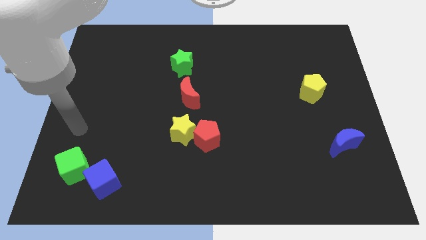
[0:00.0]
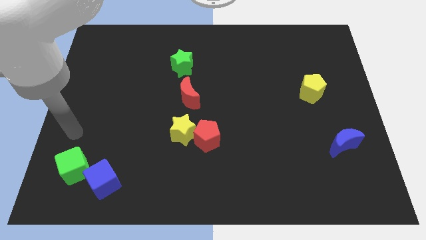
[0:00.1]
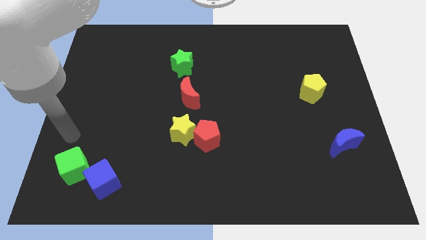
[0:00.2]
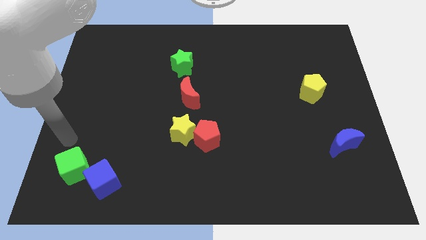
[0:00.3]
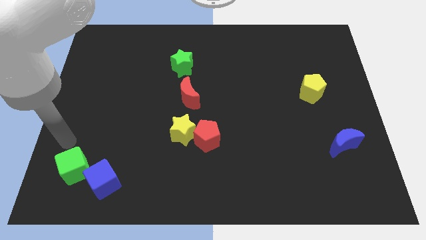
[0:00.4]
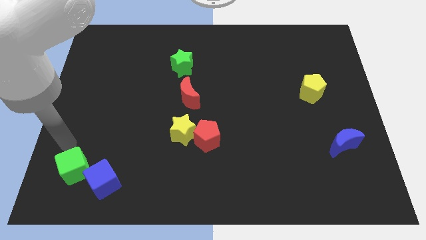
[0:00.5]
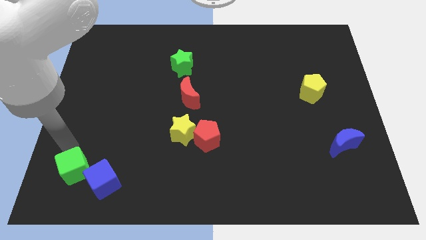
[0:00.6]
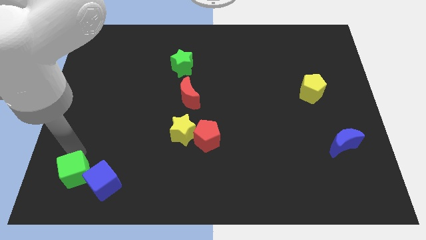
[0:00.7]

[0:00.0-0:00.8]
touch the top of green cube

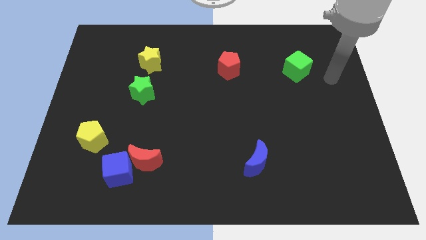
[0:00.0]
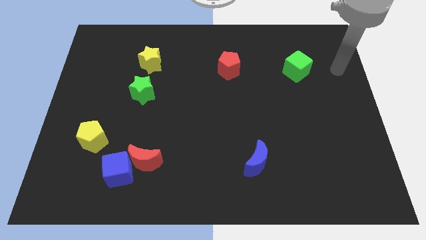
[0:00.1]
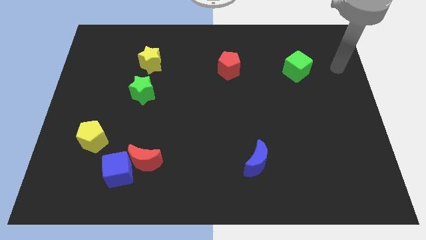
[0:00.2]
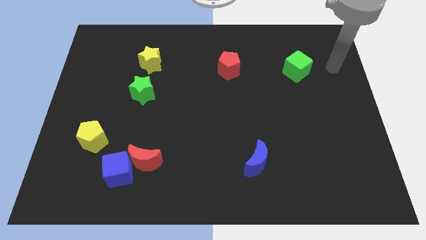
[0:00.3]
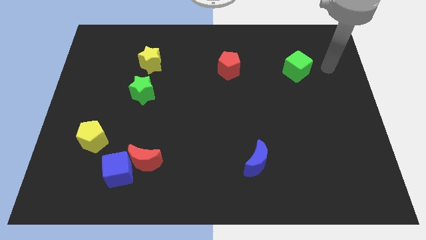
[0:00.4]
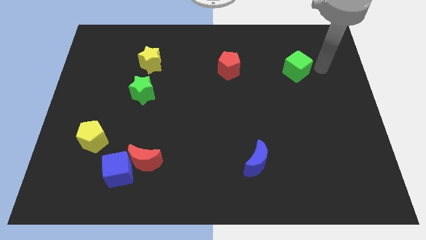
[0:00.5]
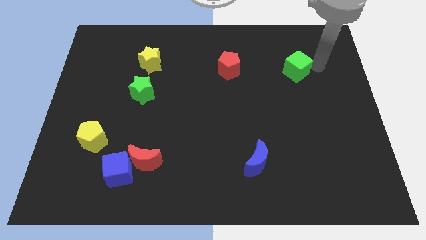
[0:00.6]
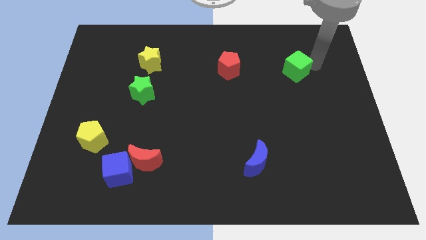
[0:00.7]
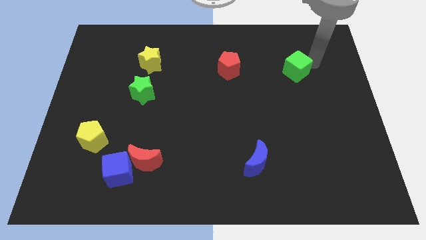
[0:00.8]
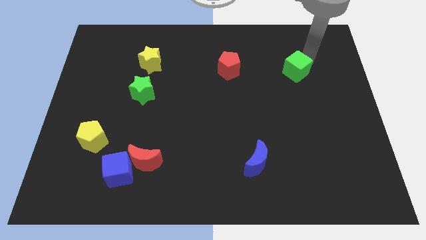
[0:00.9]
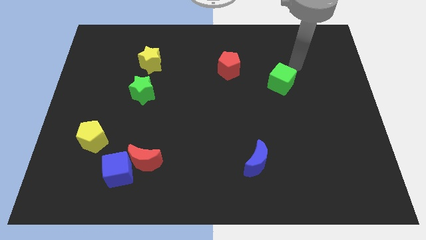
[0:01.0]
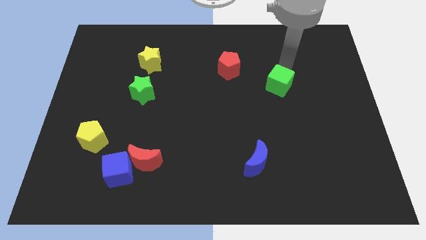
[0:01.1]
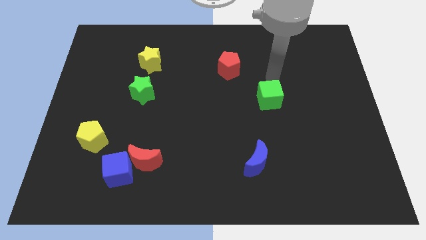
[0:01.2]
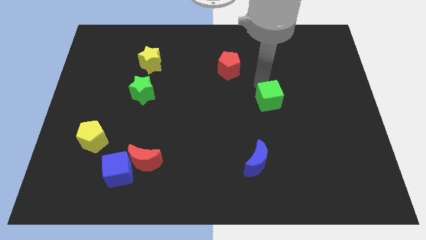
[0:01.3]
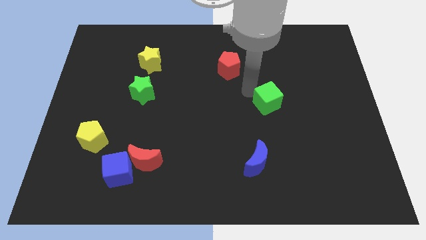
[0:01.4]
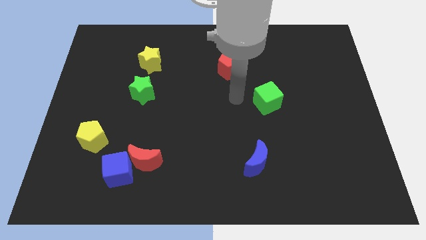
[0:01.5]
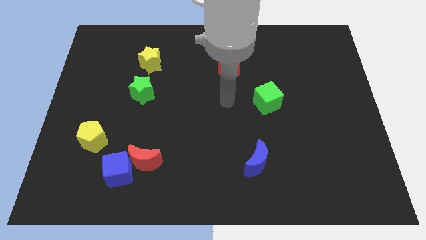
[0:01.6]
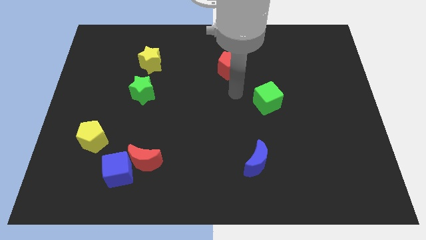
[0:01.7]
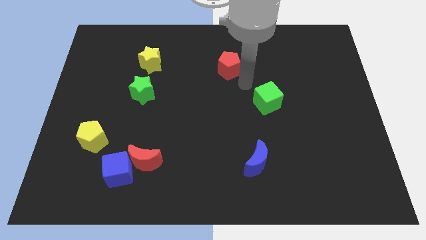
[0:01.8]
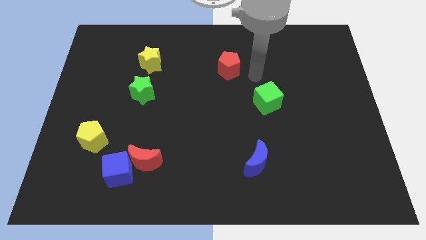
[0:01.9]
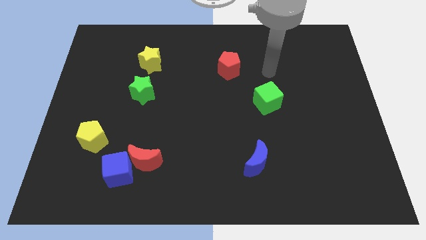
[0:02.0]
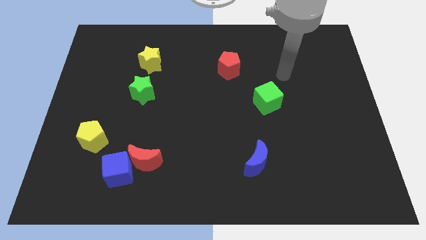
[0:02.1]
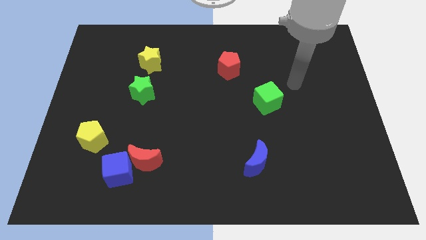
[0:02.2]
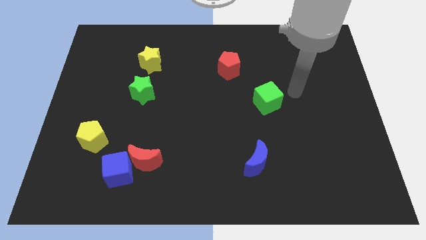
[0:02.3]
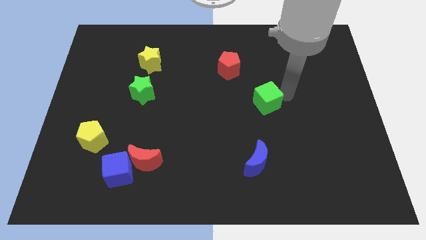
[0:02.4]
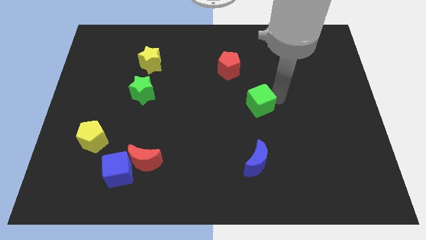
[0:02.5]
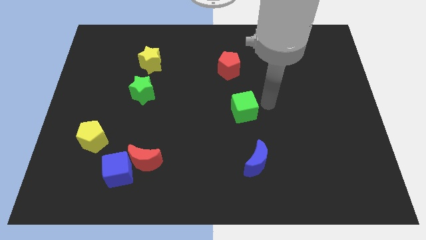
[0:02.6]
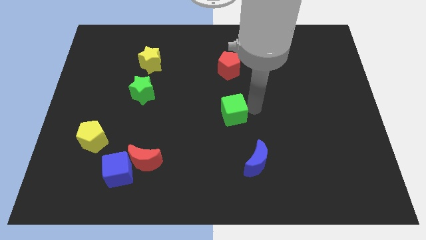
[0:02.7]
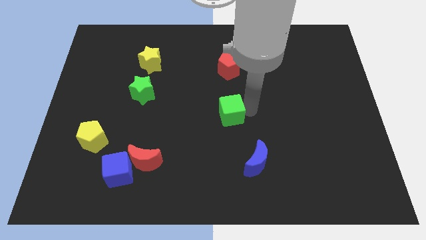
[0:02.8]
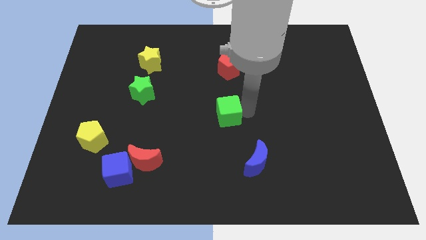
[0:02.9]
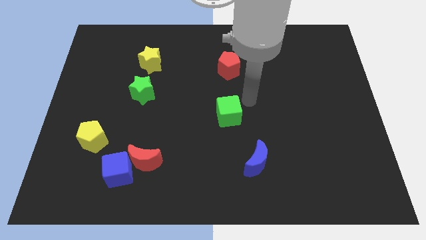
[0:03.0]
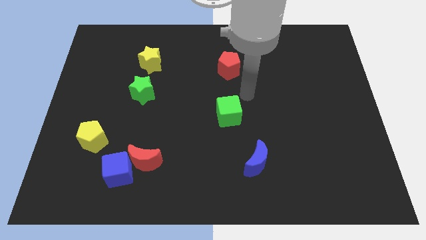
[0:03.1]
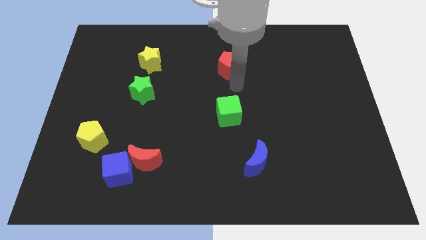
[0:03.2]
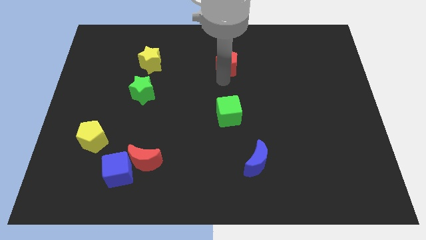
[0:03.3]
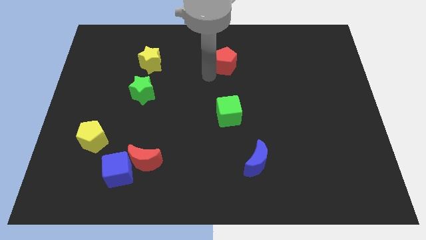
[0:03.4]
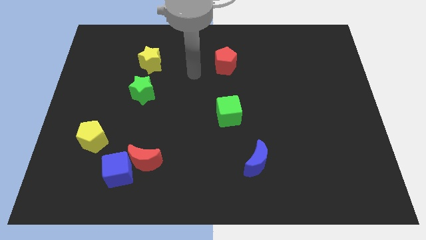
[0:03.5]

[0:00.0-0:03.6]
place the green cube above the blue moon

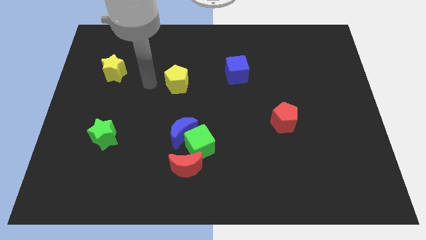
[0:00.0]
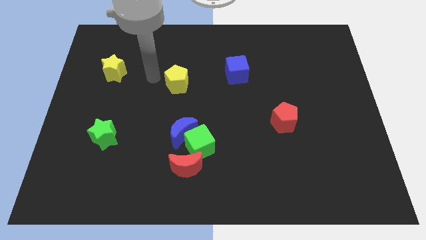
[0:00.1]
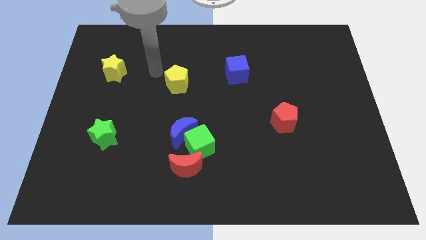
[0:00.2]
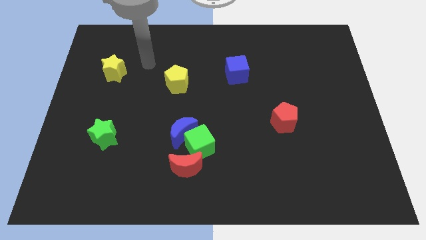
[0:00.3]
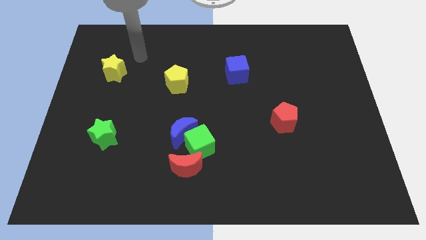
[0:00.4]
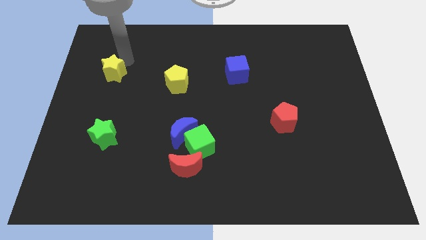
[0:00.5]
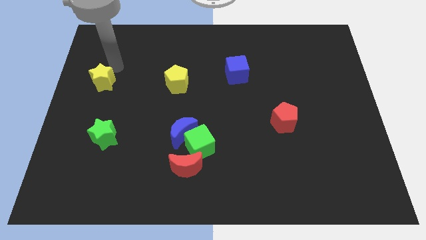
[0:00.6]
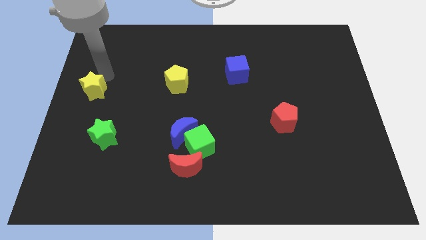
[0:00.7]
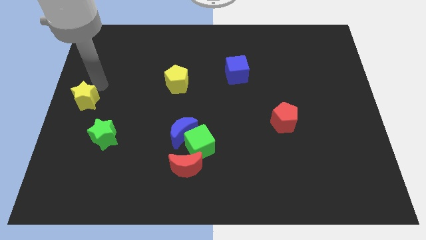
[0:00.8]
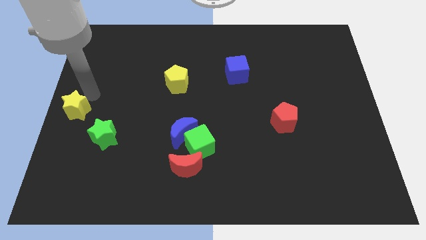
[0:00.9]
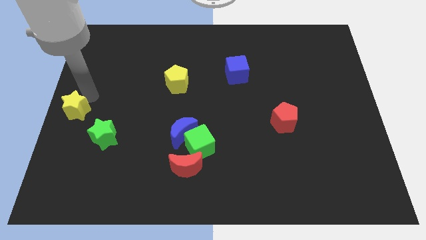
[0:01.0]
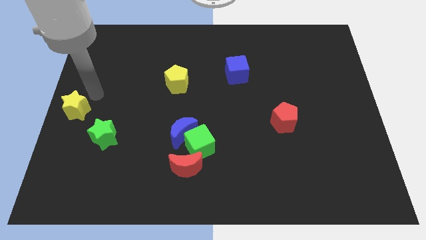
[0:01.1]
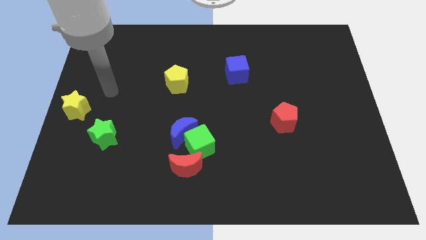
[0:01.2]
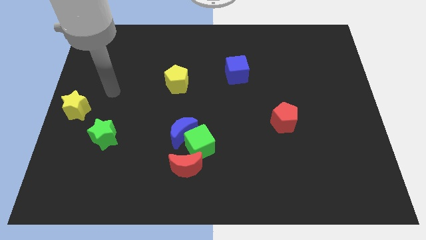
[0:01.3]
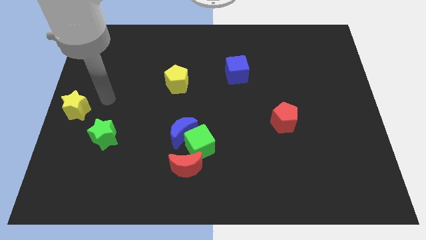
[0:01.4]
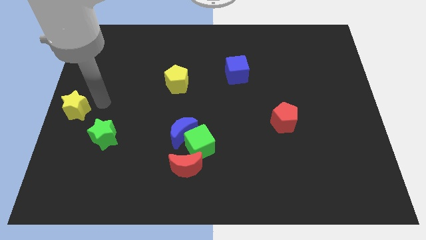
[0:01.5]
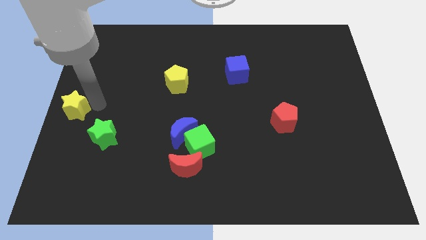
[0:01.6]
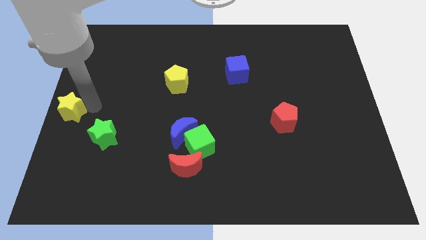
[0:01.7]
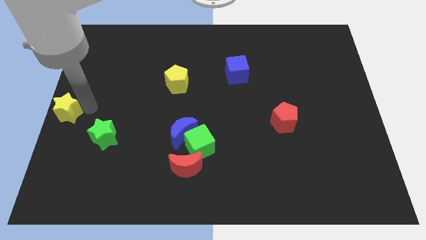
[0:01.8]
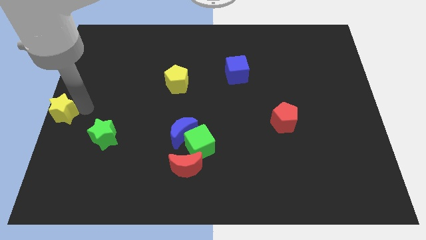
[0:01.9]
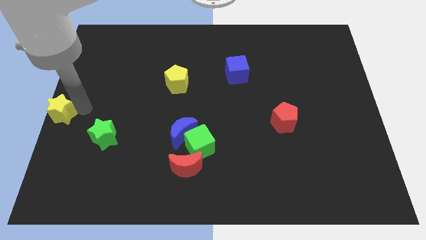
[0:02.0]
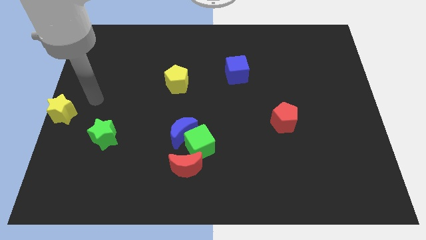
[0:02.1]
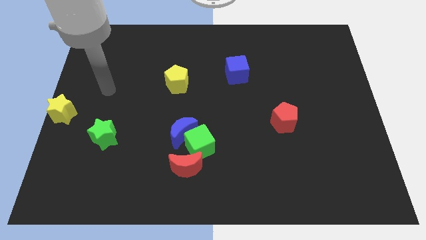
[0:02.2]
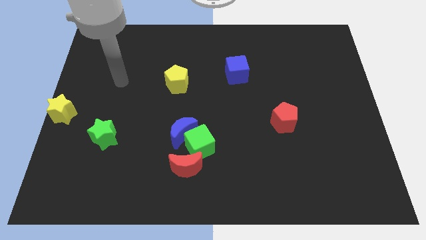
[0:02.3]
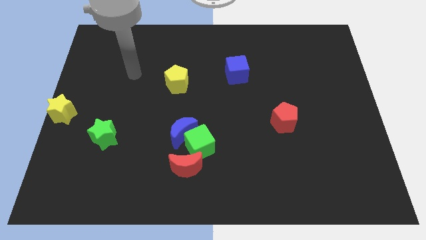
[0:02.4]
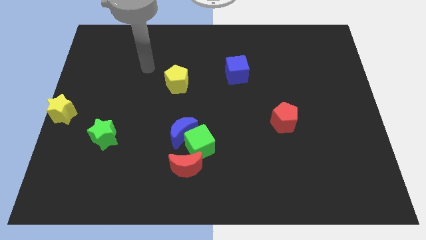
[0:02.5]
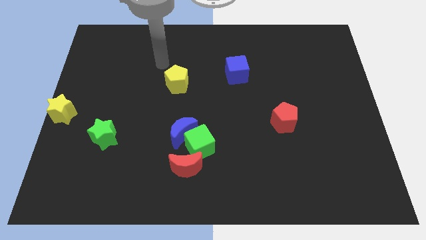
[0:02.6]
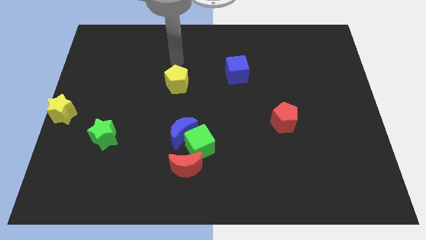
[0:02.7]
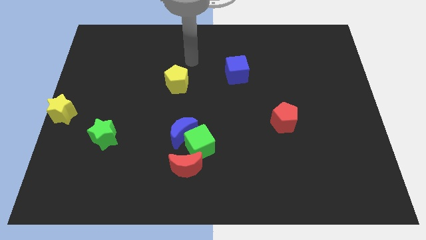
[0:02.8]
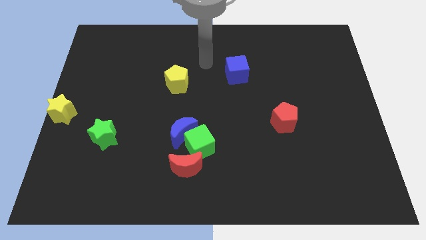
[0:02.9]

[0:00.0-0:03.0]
push the yellow star to the left center of the board

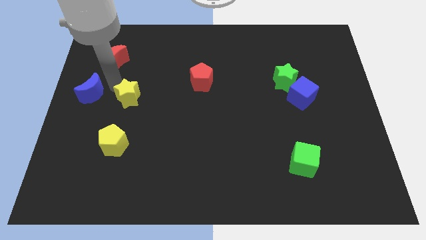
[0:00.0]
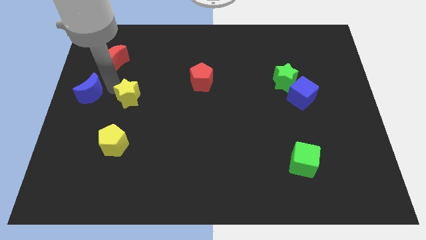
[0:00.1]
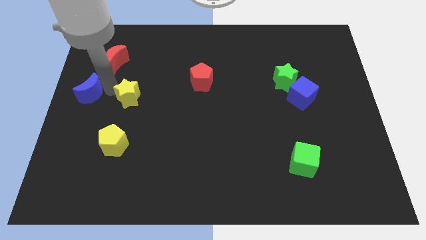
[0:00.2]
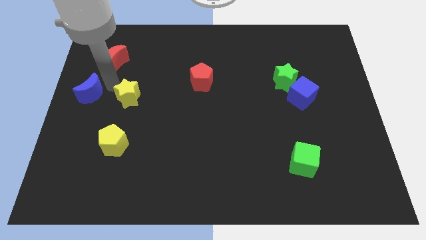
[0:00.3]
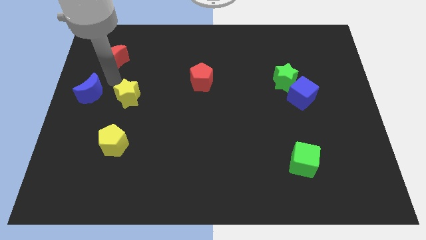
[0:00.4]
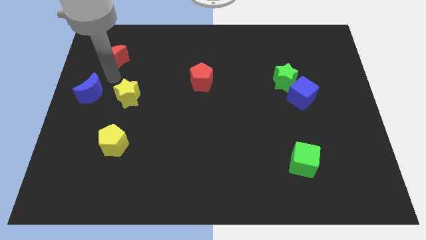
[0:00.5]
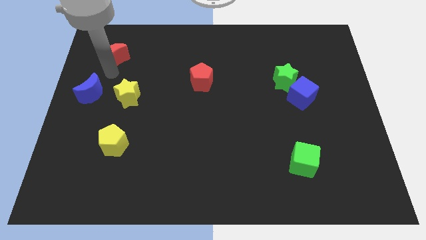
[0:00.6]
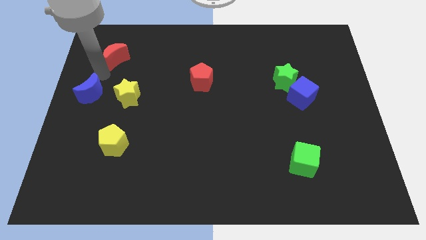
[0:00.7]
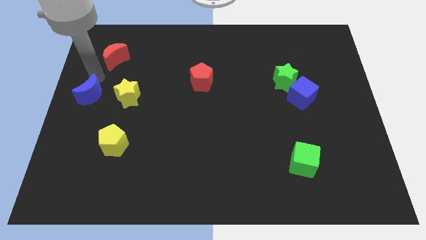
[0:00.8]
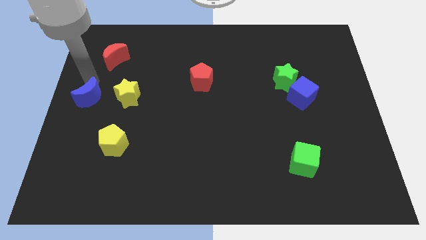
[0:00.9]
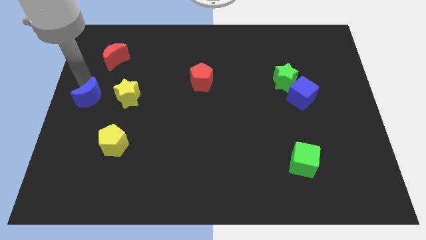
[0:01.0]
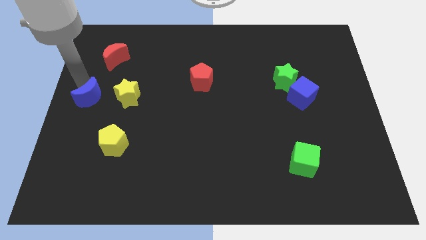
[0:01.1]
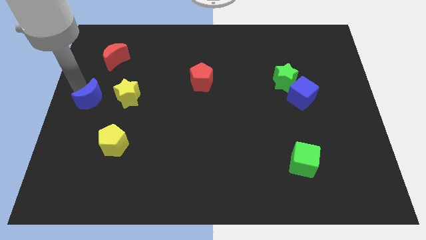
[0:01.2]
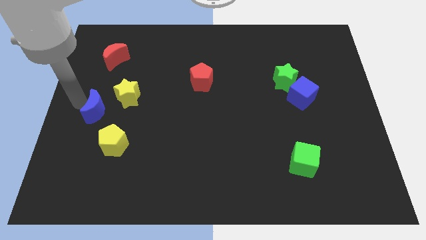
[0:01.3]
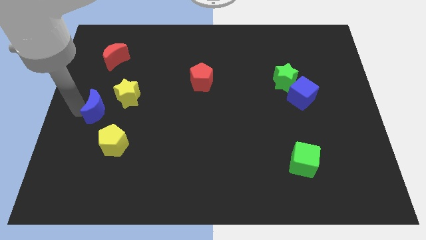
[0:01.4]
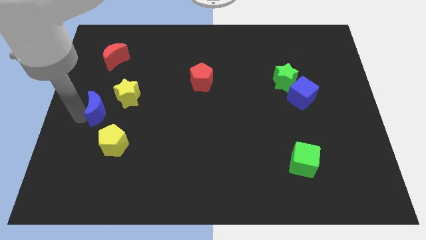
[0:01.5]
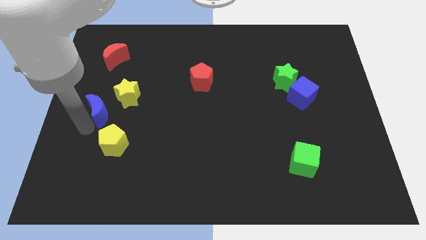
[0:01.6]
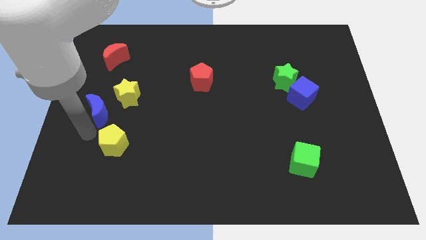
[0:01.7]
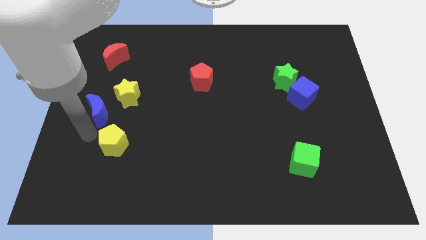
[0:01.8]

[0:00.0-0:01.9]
slightly push the blue moon top side of the yellow pentagon
